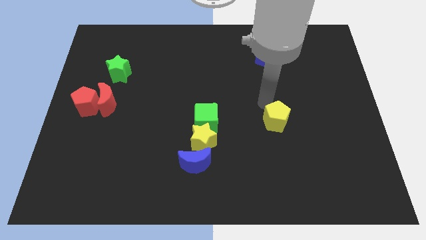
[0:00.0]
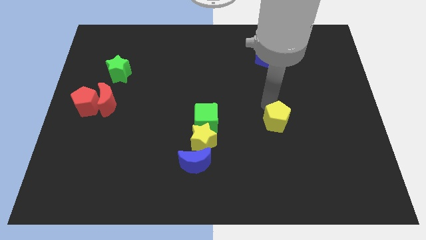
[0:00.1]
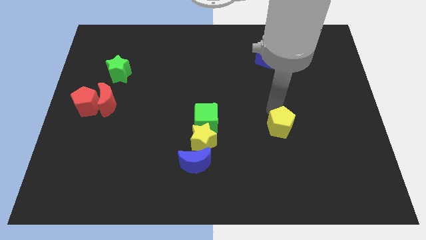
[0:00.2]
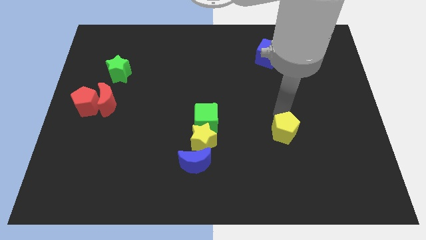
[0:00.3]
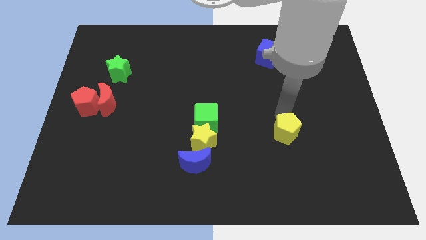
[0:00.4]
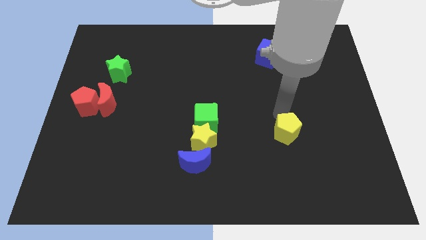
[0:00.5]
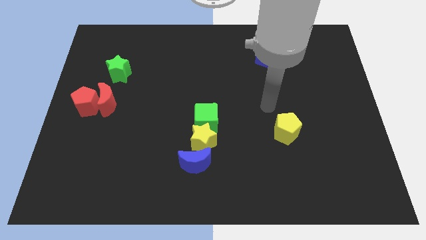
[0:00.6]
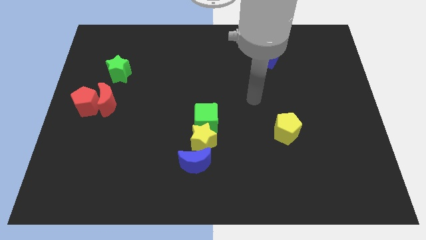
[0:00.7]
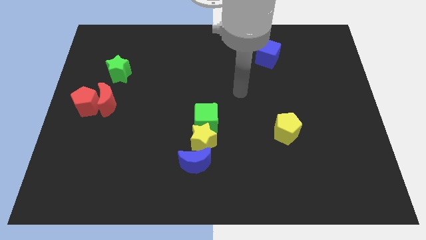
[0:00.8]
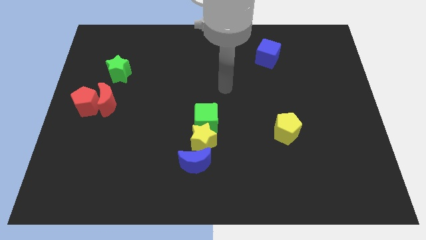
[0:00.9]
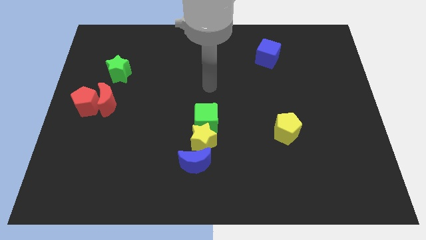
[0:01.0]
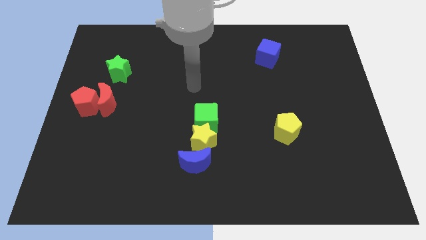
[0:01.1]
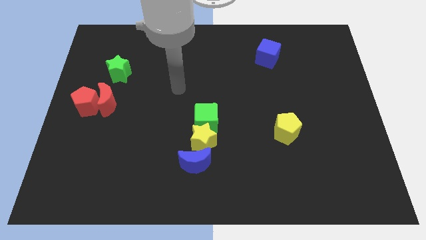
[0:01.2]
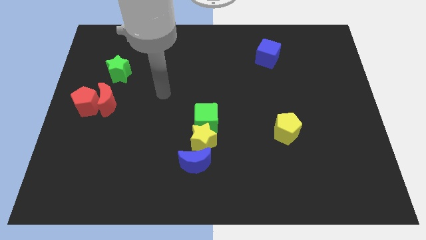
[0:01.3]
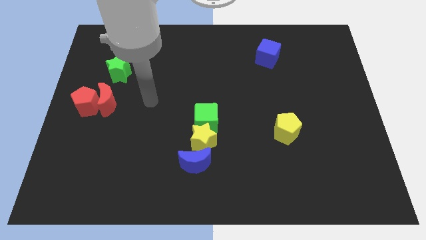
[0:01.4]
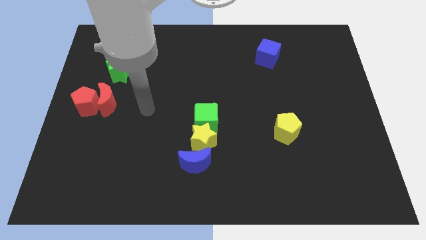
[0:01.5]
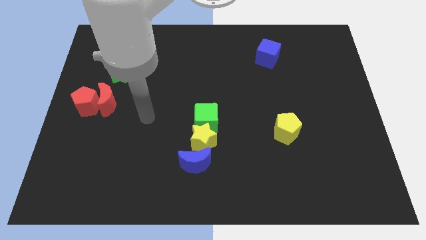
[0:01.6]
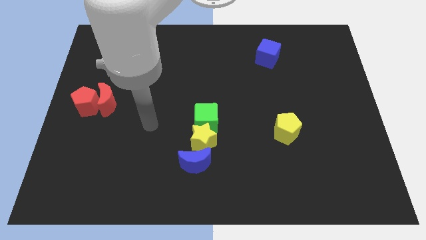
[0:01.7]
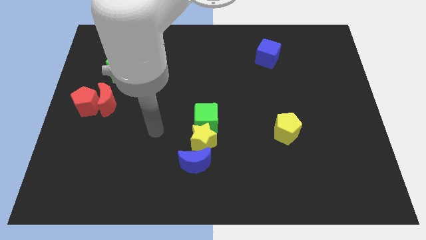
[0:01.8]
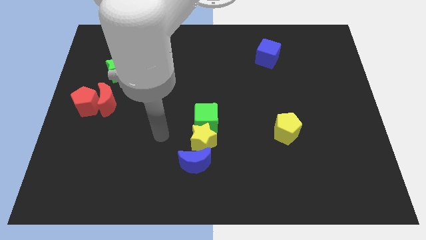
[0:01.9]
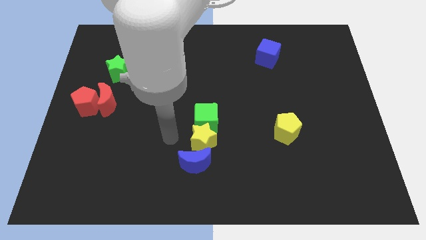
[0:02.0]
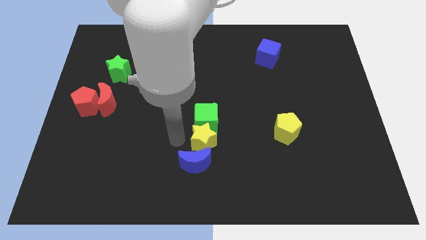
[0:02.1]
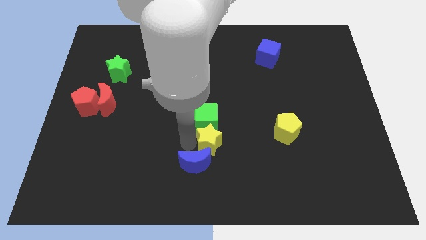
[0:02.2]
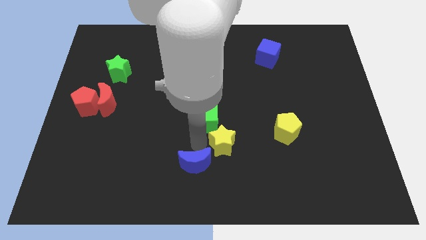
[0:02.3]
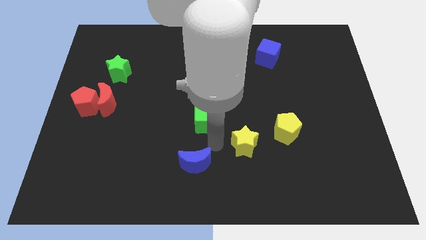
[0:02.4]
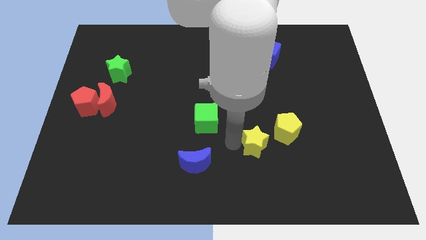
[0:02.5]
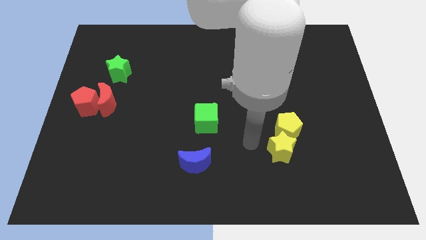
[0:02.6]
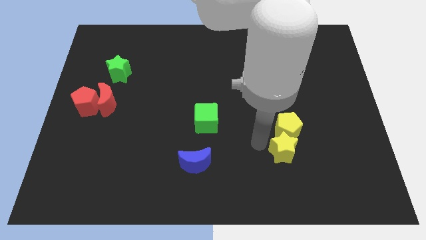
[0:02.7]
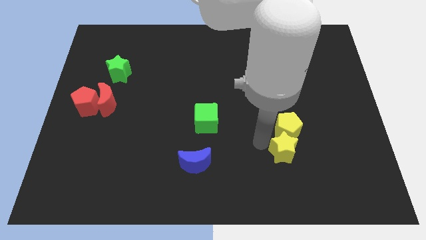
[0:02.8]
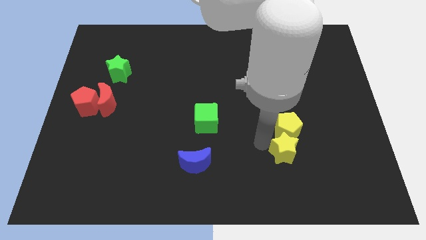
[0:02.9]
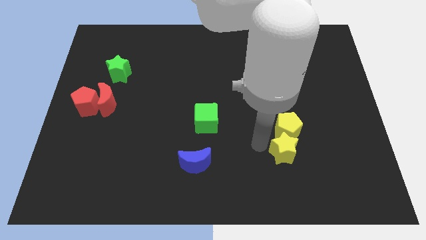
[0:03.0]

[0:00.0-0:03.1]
slide the yellow star below the yellow pentagon

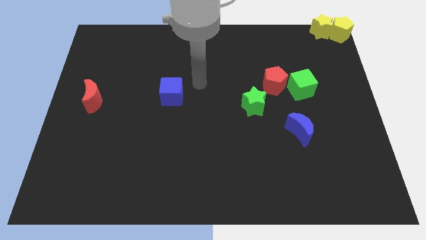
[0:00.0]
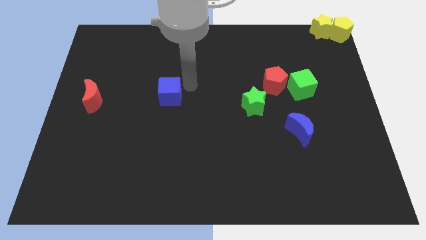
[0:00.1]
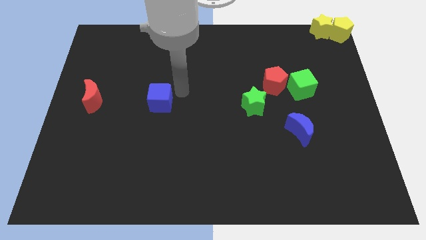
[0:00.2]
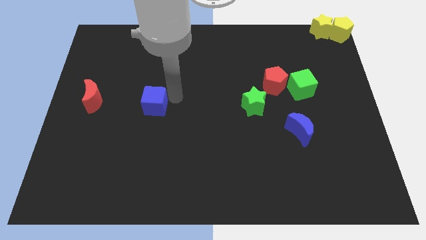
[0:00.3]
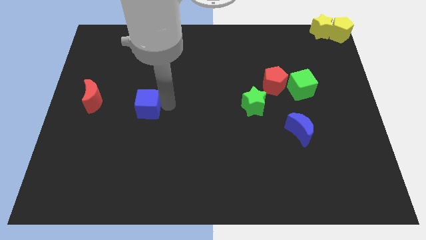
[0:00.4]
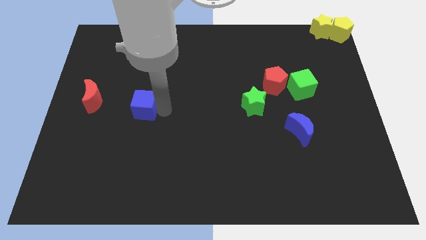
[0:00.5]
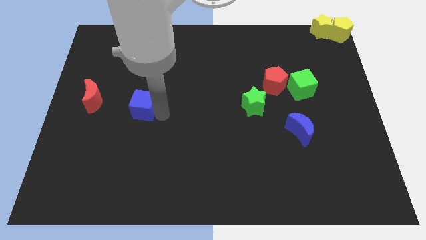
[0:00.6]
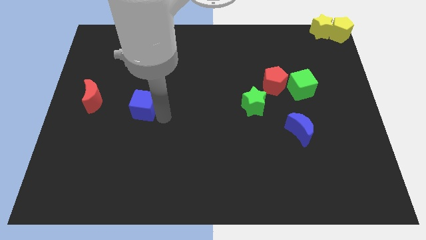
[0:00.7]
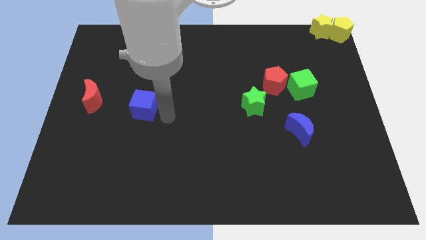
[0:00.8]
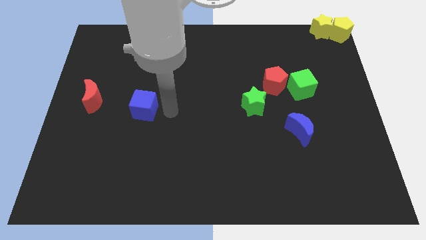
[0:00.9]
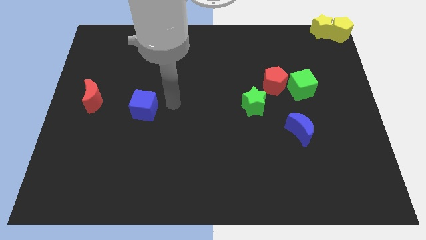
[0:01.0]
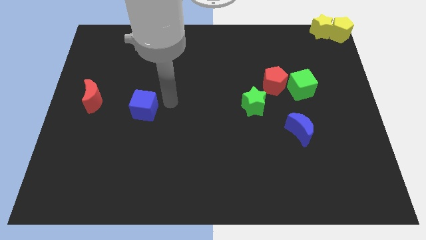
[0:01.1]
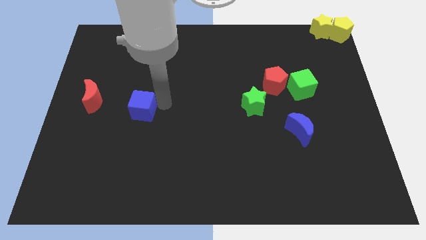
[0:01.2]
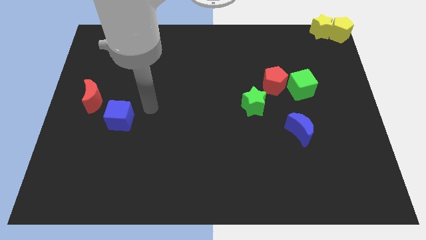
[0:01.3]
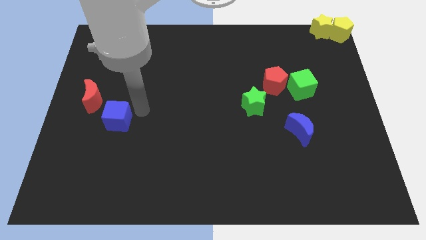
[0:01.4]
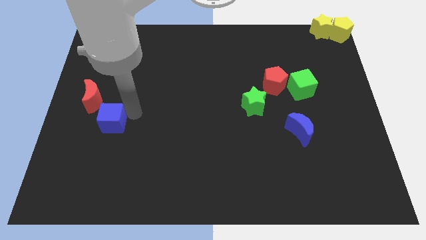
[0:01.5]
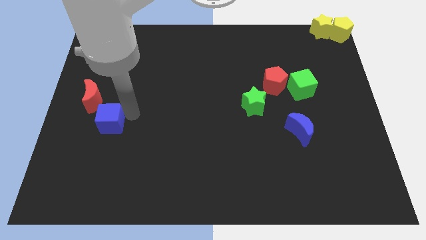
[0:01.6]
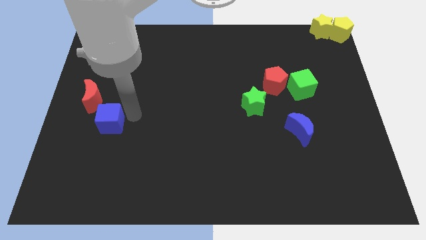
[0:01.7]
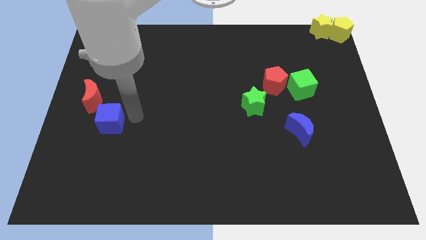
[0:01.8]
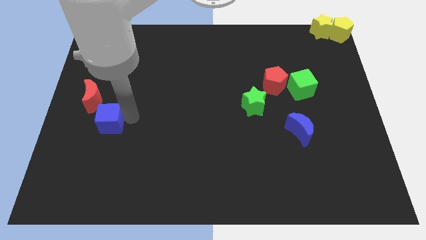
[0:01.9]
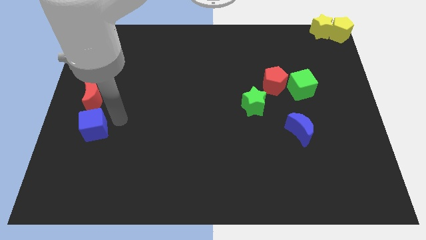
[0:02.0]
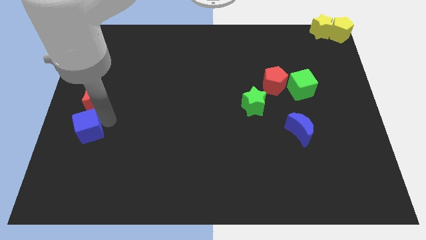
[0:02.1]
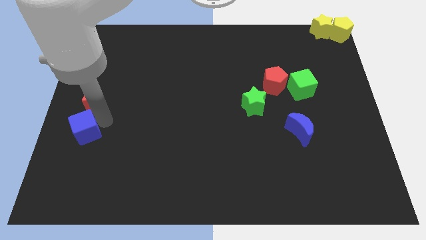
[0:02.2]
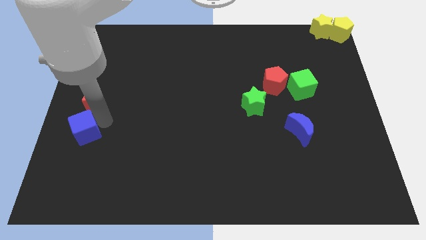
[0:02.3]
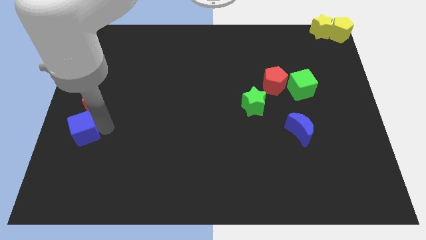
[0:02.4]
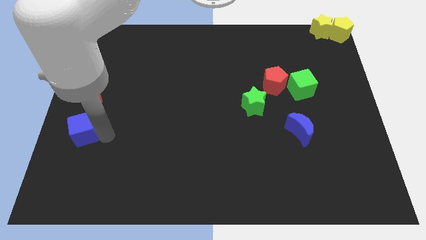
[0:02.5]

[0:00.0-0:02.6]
push the blue cube to the bottom of the red moon

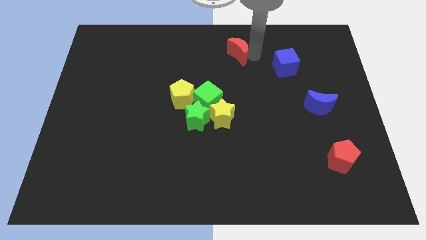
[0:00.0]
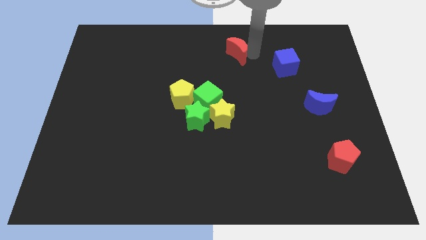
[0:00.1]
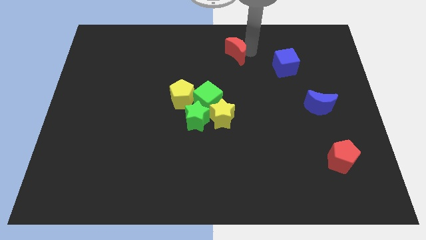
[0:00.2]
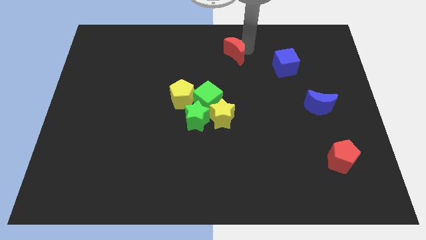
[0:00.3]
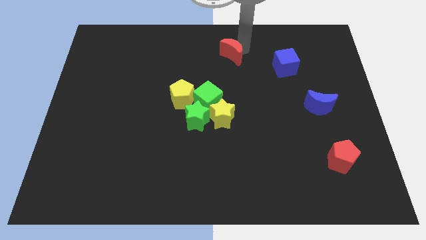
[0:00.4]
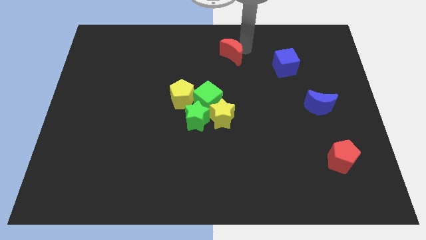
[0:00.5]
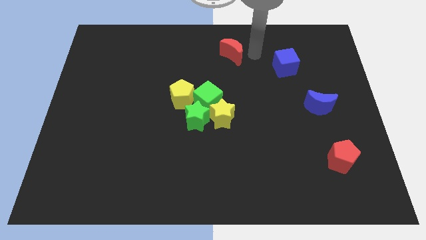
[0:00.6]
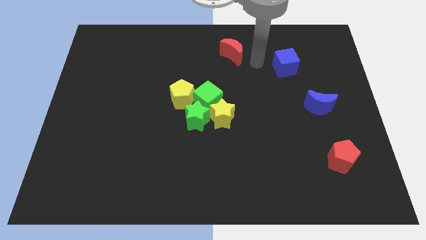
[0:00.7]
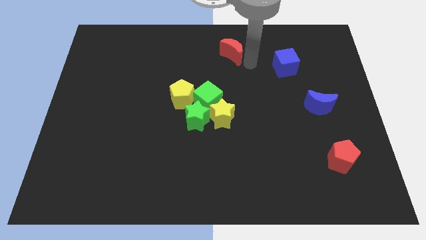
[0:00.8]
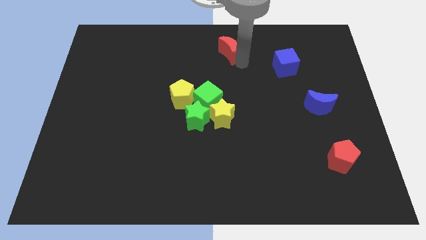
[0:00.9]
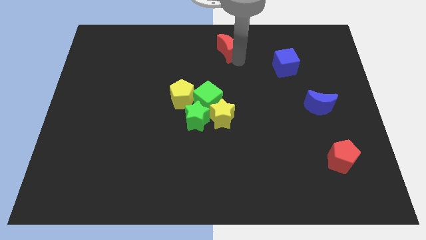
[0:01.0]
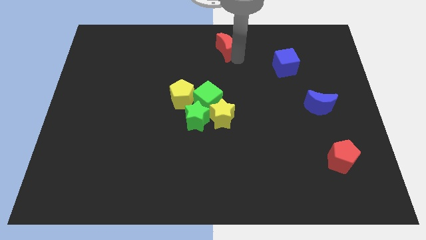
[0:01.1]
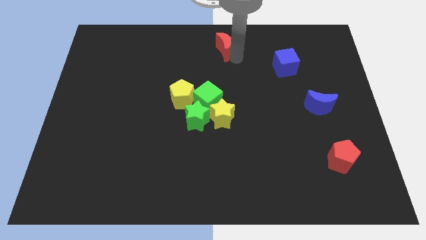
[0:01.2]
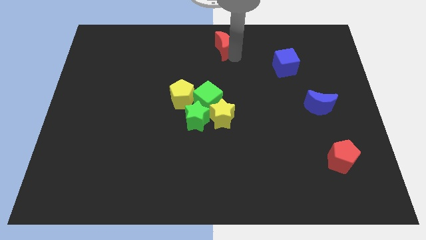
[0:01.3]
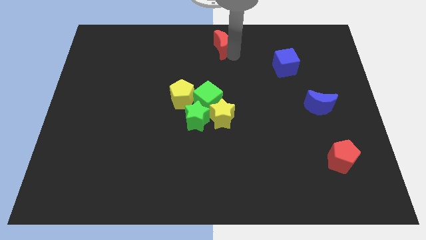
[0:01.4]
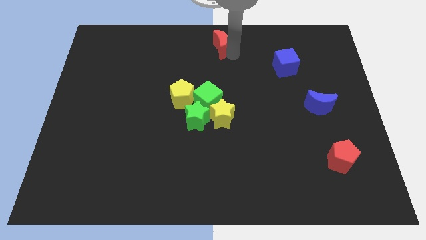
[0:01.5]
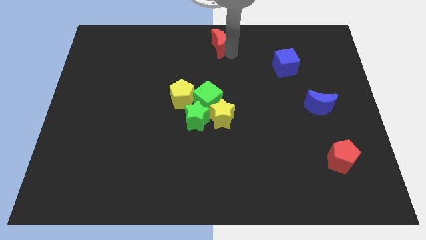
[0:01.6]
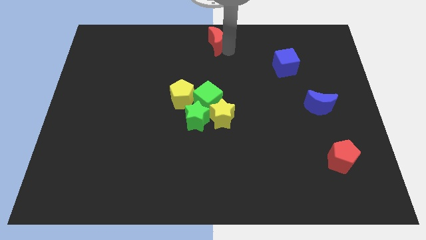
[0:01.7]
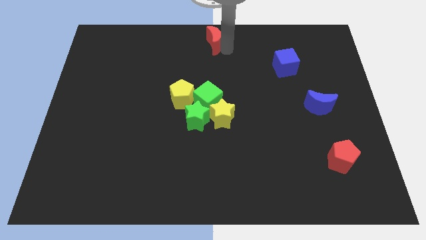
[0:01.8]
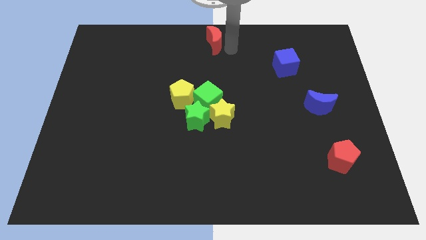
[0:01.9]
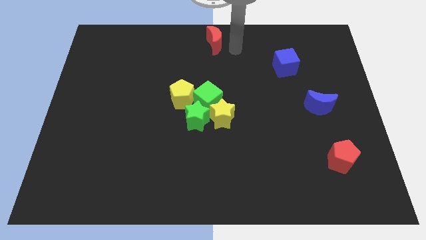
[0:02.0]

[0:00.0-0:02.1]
push the red crescent to the top center of the board

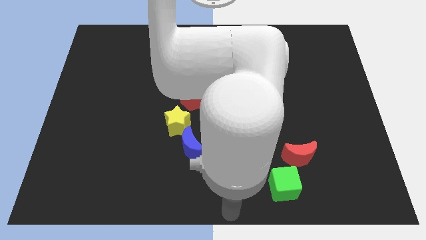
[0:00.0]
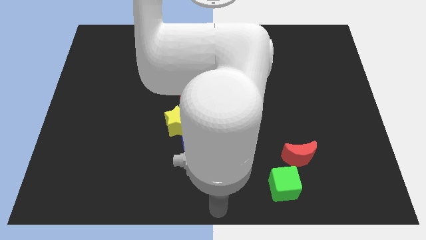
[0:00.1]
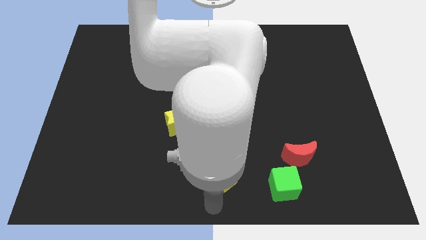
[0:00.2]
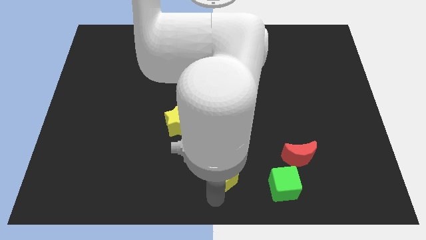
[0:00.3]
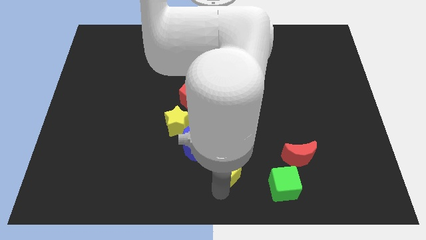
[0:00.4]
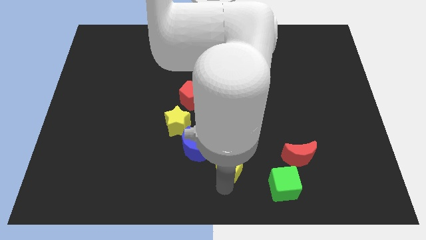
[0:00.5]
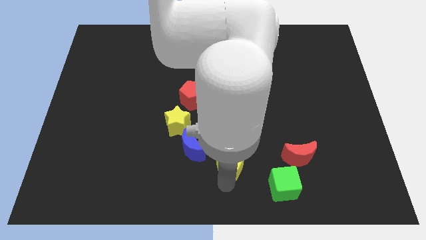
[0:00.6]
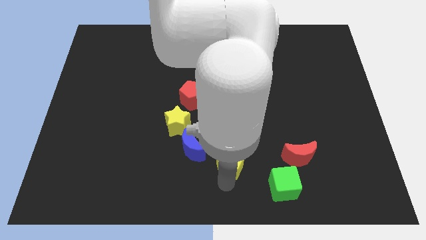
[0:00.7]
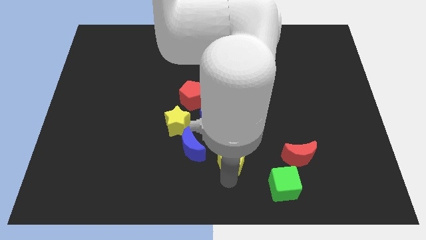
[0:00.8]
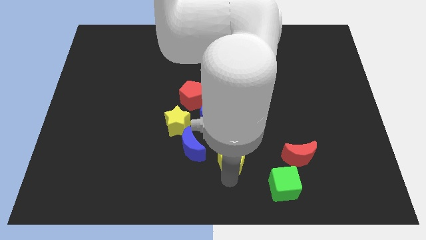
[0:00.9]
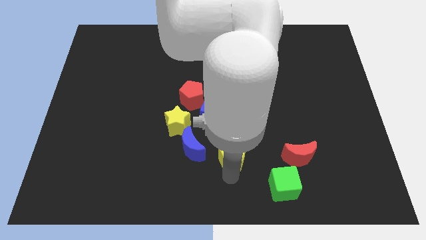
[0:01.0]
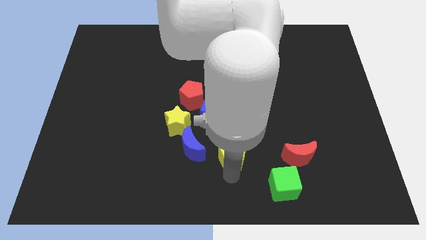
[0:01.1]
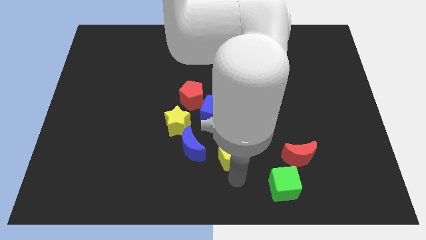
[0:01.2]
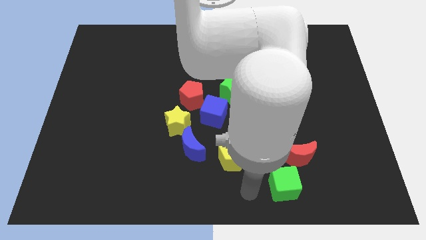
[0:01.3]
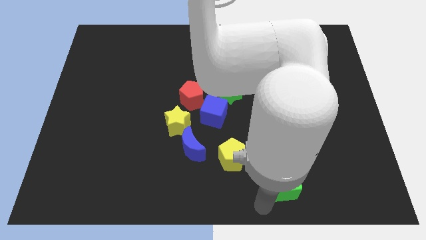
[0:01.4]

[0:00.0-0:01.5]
slightly move the yellow pentagon up
